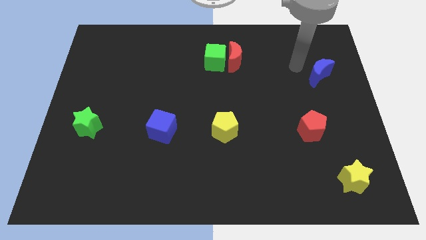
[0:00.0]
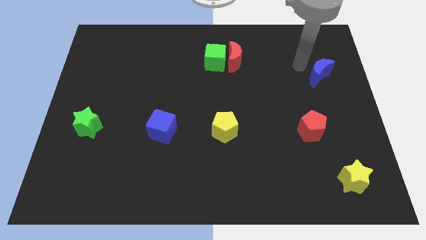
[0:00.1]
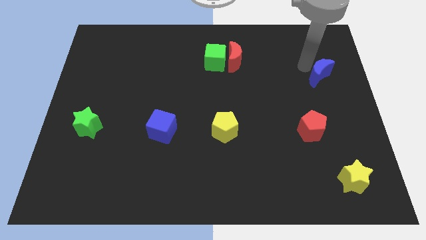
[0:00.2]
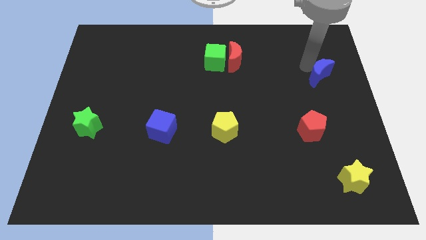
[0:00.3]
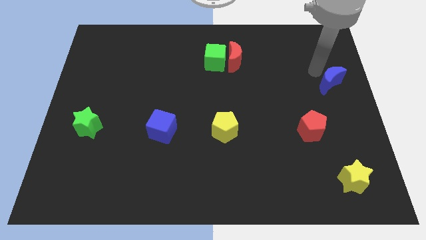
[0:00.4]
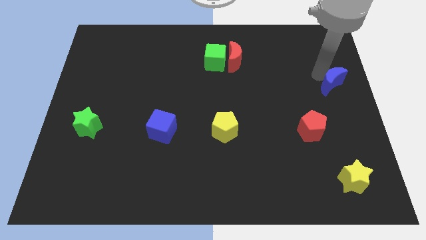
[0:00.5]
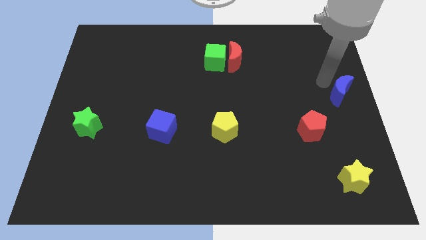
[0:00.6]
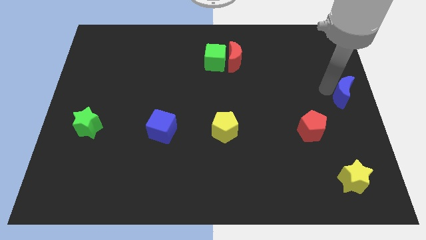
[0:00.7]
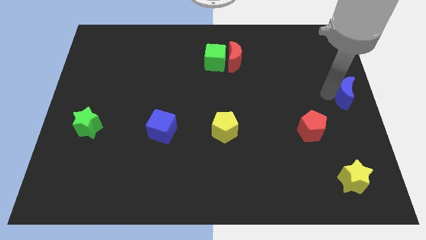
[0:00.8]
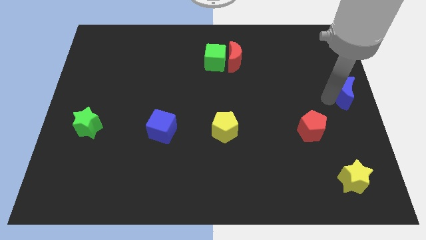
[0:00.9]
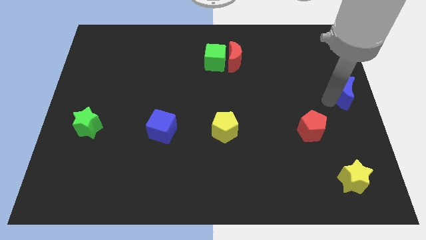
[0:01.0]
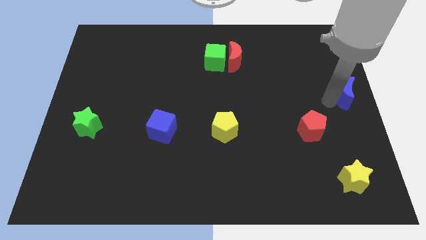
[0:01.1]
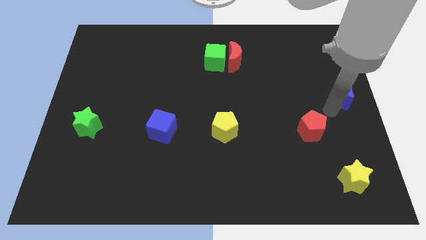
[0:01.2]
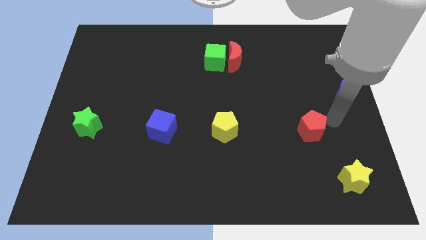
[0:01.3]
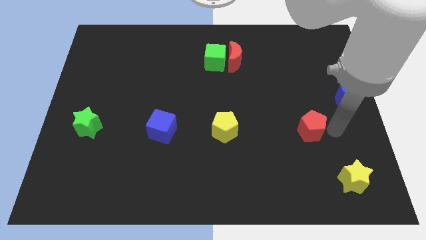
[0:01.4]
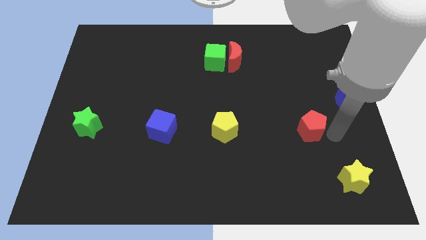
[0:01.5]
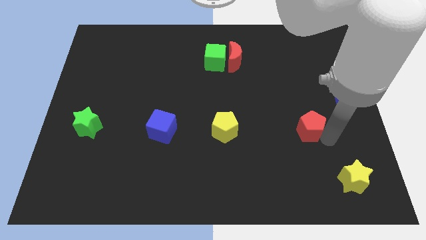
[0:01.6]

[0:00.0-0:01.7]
move the blue crescent to the center right of the board

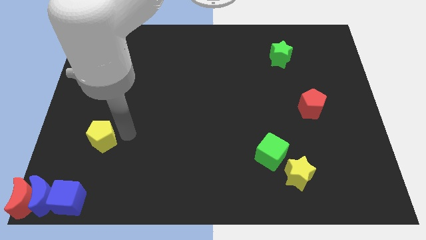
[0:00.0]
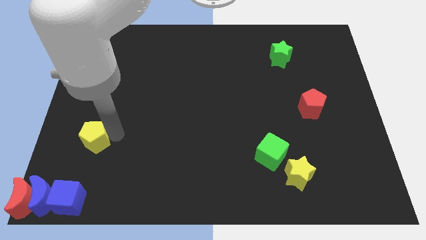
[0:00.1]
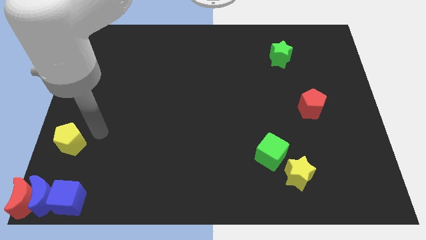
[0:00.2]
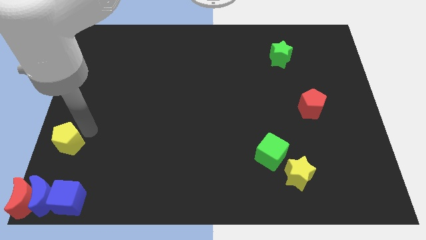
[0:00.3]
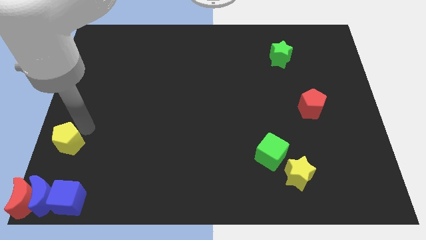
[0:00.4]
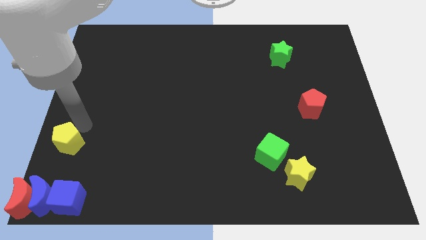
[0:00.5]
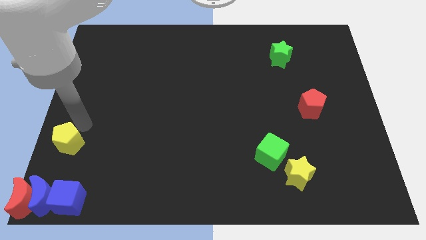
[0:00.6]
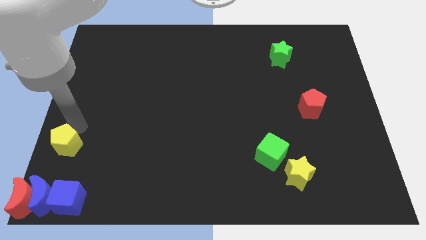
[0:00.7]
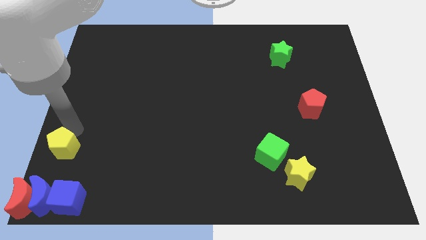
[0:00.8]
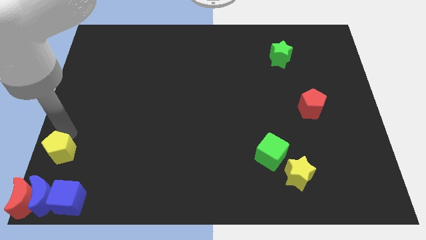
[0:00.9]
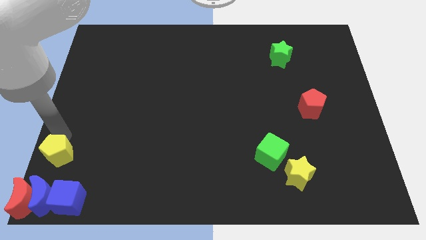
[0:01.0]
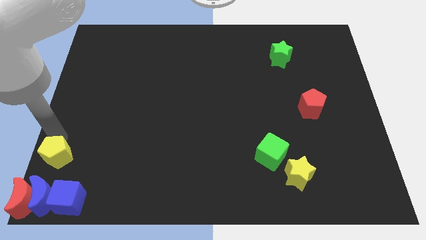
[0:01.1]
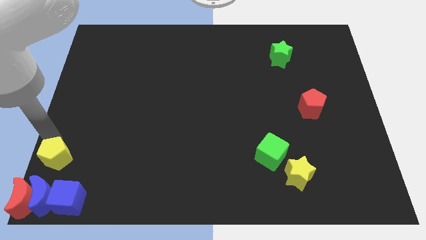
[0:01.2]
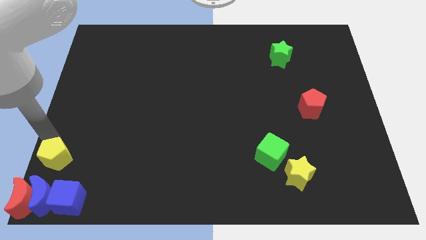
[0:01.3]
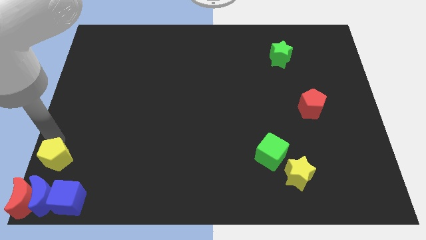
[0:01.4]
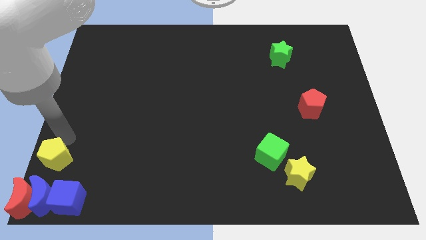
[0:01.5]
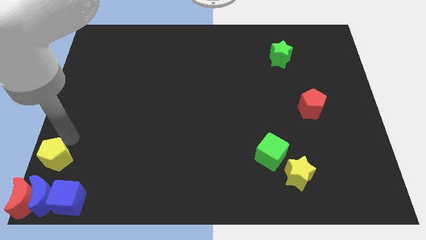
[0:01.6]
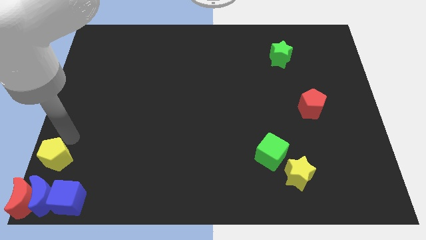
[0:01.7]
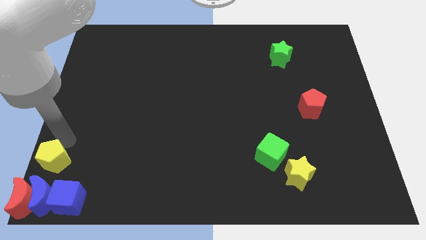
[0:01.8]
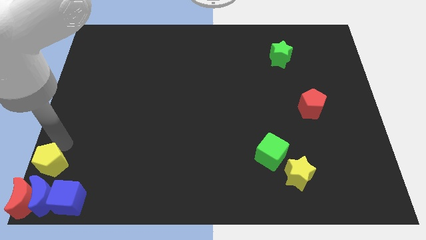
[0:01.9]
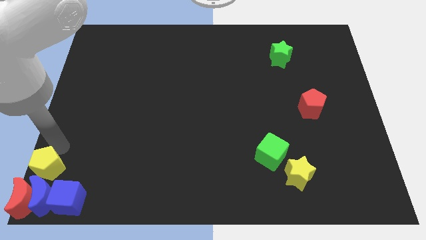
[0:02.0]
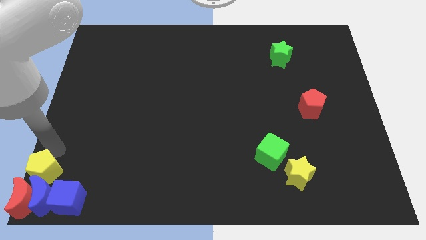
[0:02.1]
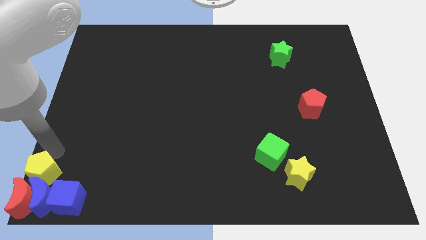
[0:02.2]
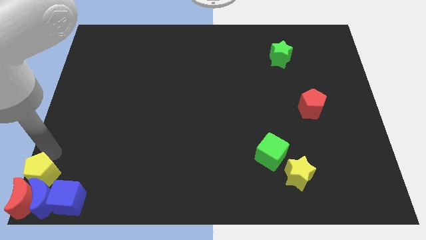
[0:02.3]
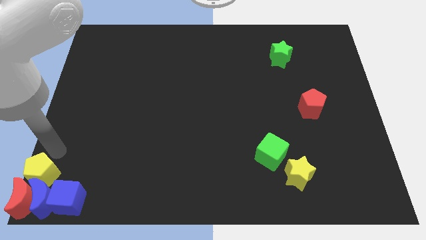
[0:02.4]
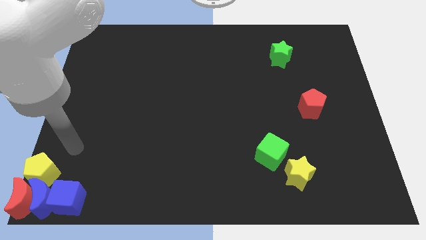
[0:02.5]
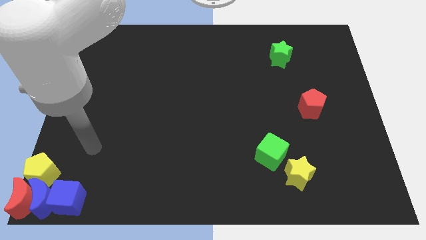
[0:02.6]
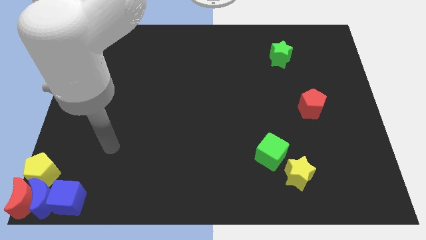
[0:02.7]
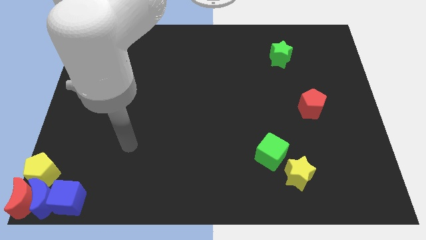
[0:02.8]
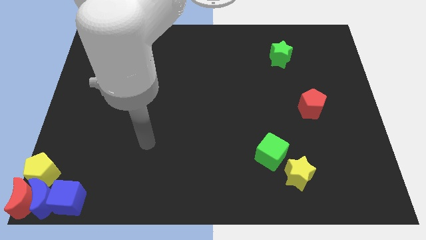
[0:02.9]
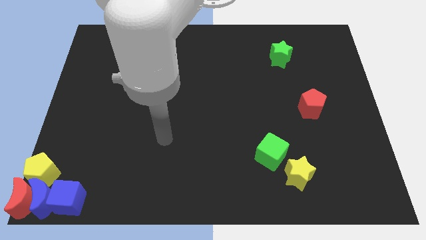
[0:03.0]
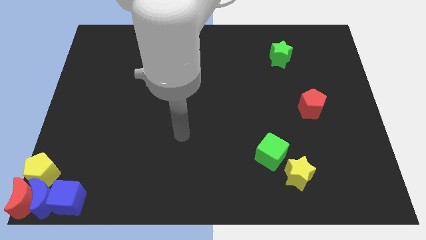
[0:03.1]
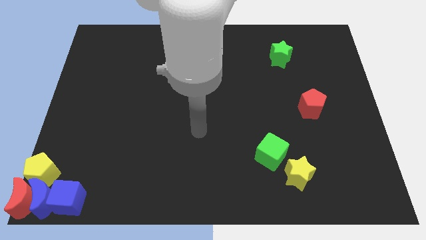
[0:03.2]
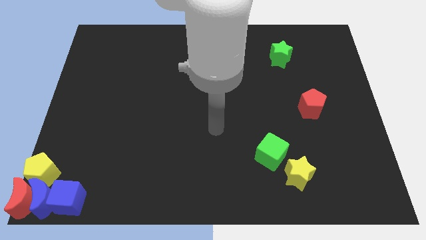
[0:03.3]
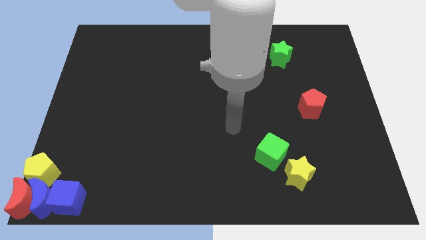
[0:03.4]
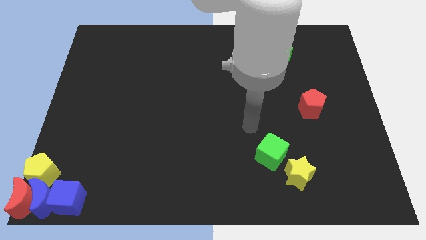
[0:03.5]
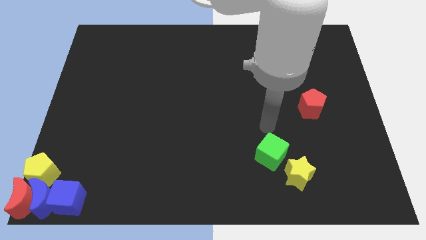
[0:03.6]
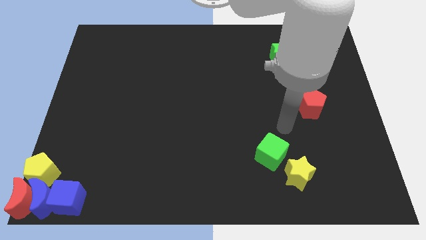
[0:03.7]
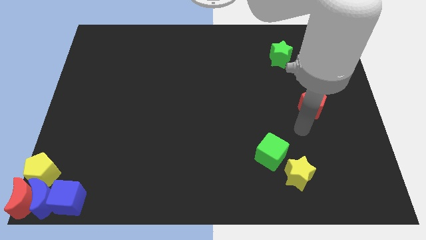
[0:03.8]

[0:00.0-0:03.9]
push the yellow pentagon into the group of blocks

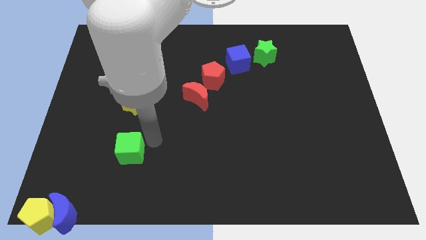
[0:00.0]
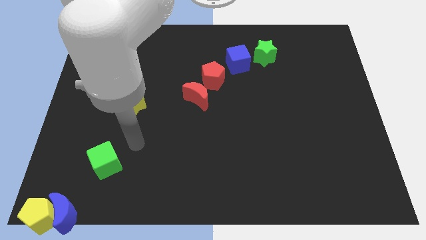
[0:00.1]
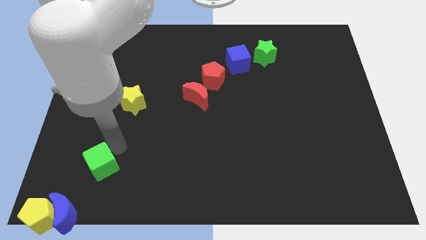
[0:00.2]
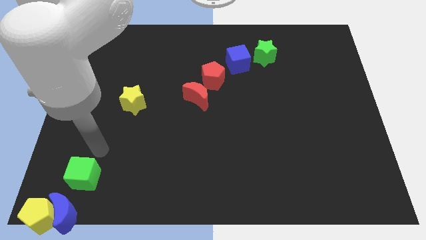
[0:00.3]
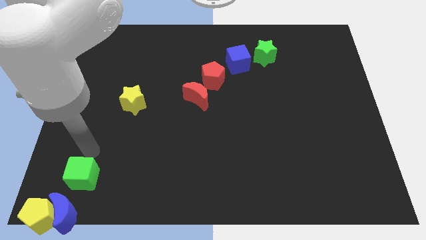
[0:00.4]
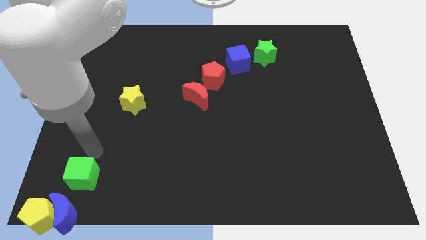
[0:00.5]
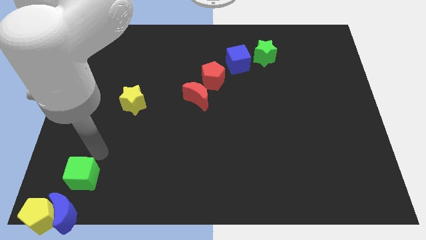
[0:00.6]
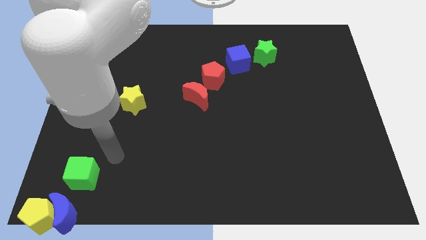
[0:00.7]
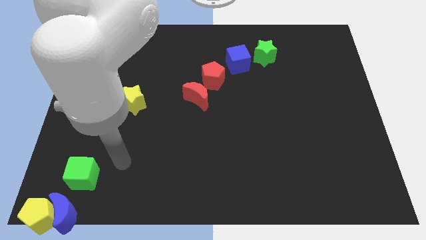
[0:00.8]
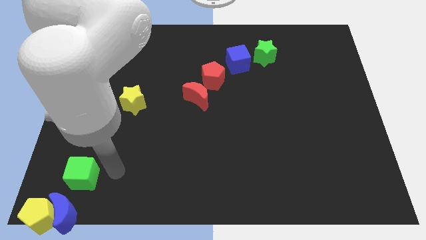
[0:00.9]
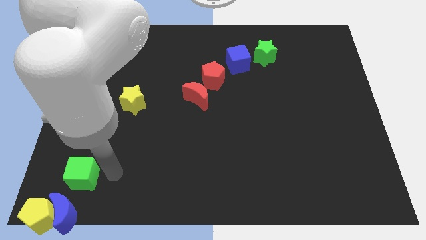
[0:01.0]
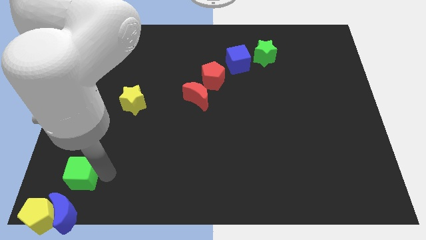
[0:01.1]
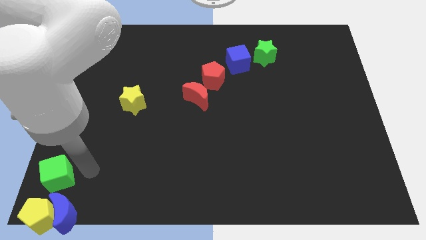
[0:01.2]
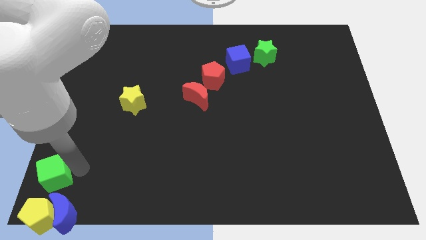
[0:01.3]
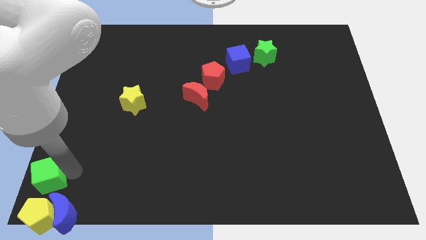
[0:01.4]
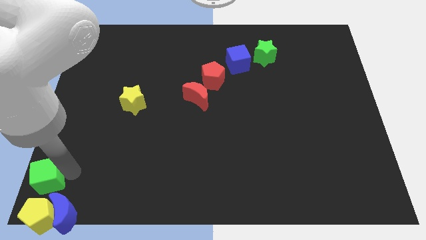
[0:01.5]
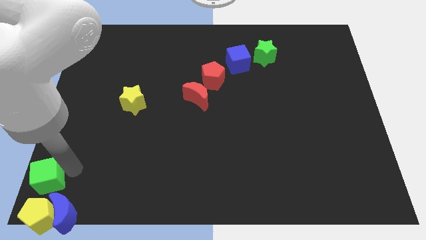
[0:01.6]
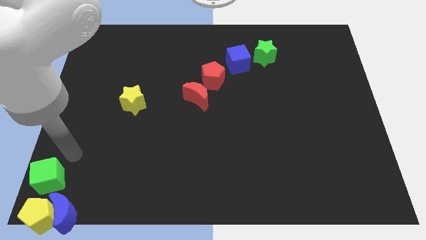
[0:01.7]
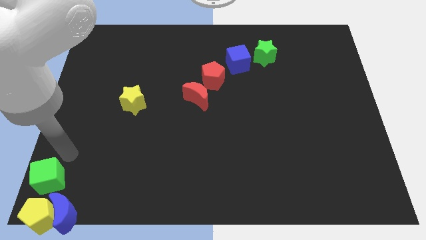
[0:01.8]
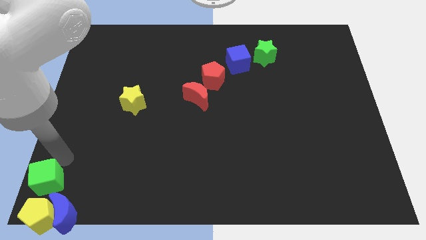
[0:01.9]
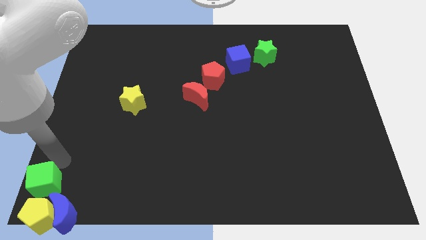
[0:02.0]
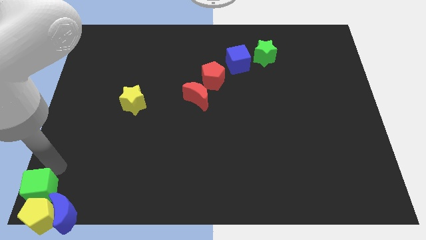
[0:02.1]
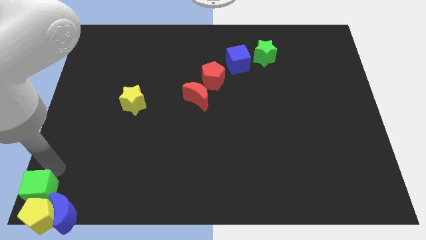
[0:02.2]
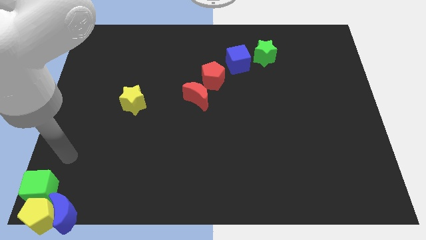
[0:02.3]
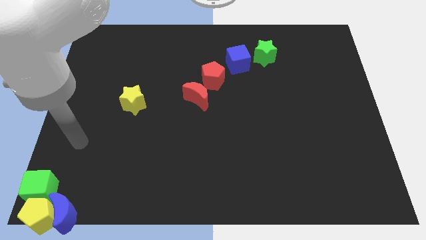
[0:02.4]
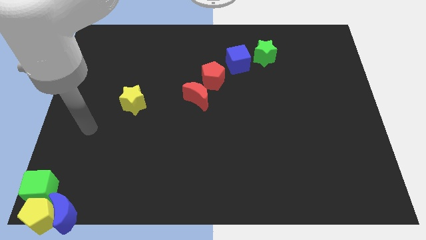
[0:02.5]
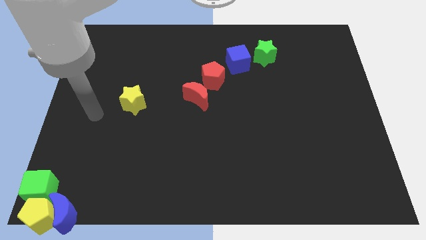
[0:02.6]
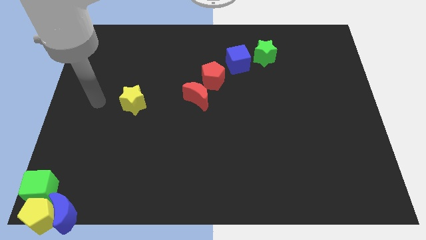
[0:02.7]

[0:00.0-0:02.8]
move green cube into yellow pentagon

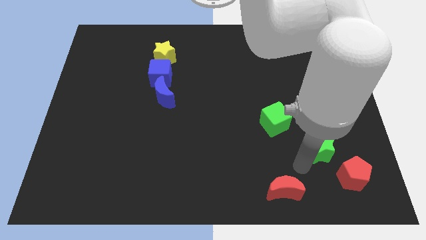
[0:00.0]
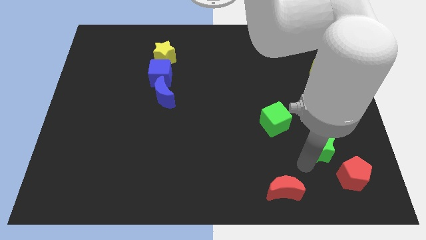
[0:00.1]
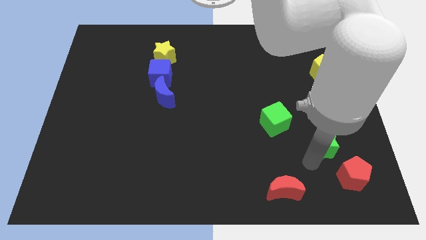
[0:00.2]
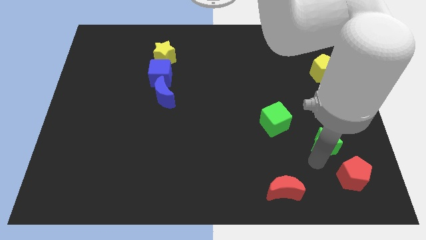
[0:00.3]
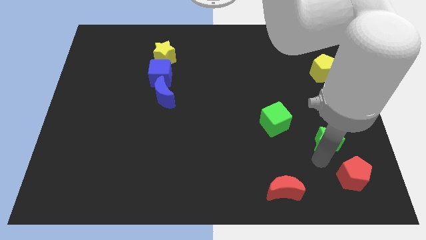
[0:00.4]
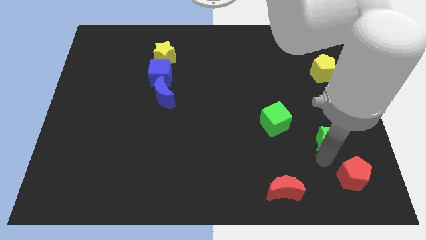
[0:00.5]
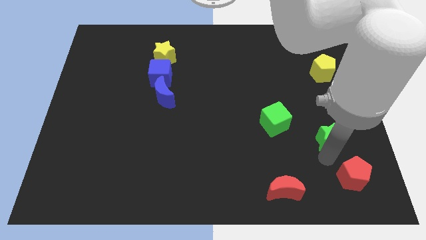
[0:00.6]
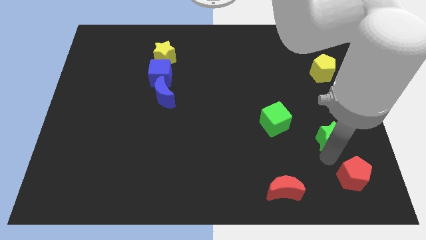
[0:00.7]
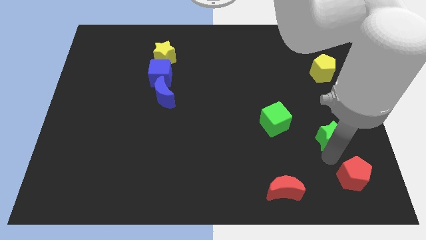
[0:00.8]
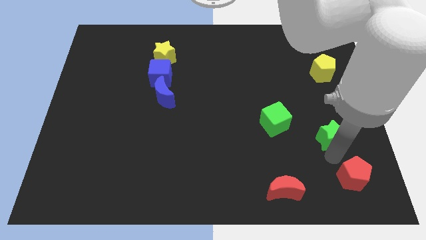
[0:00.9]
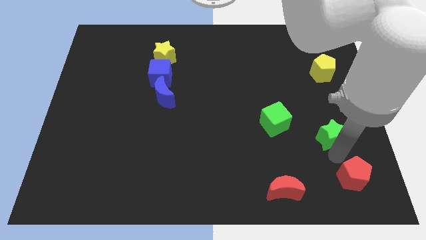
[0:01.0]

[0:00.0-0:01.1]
place your arm in between green star and red pentagon
